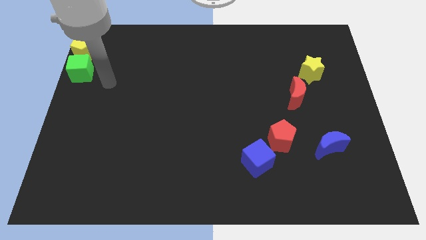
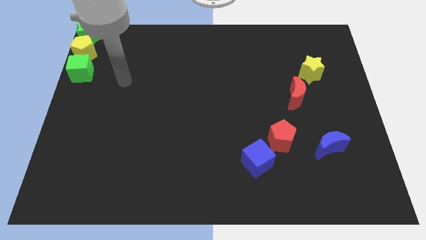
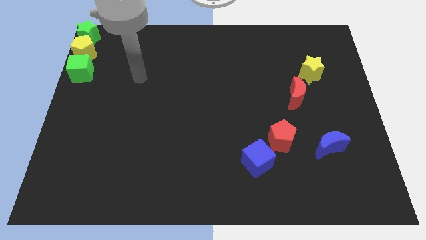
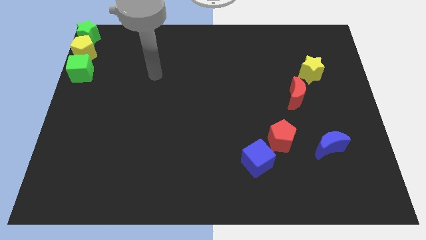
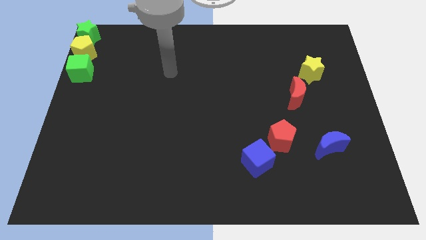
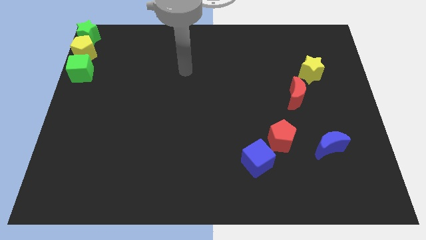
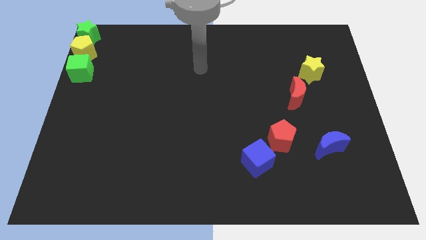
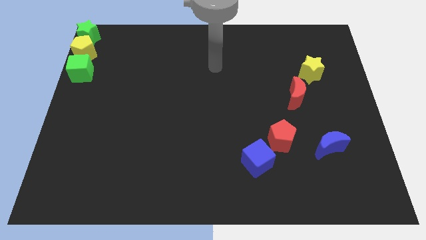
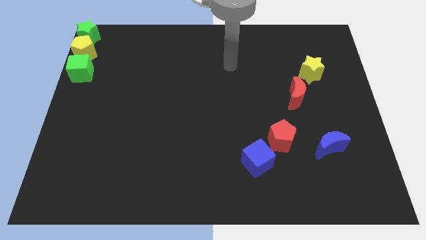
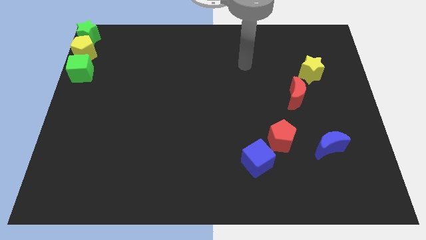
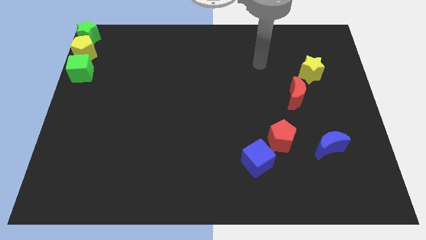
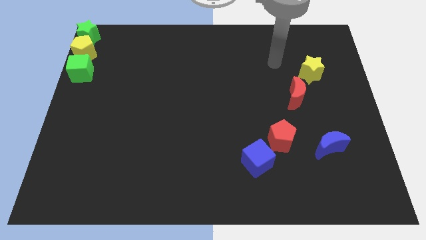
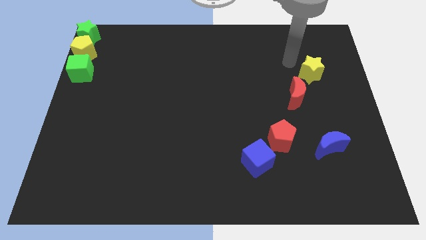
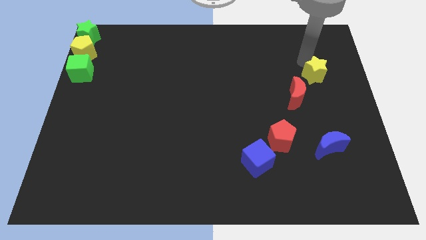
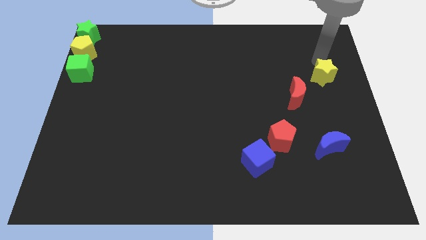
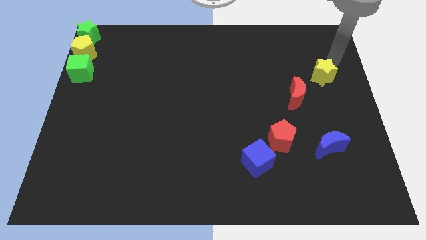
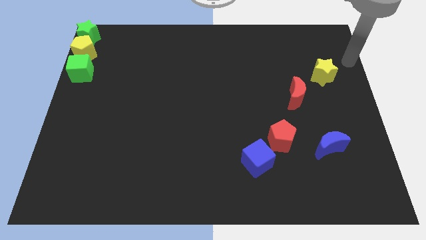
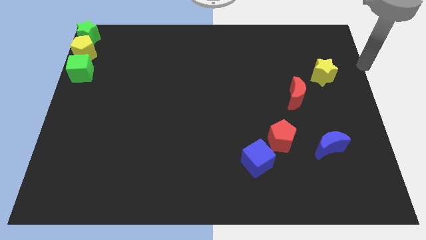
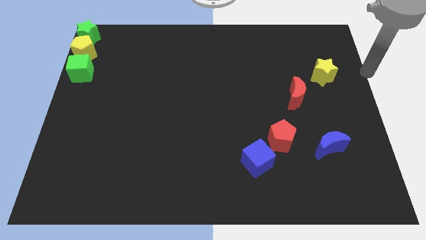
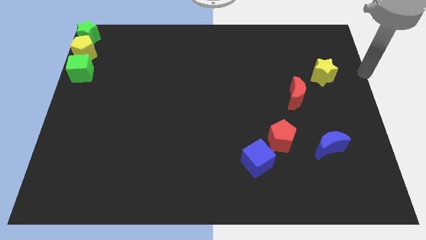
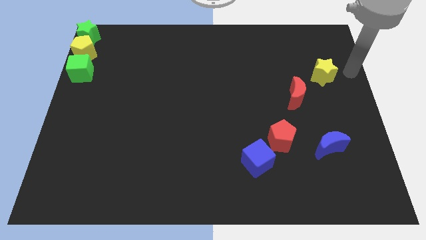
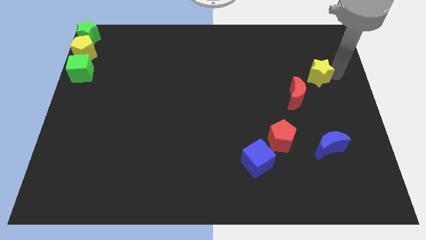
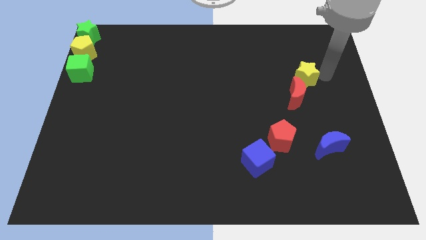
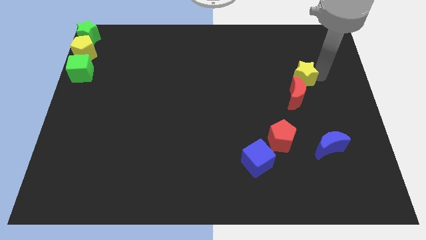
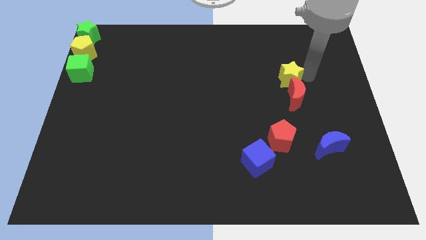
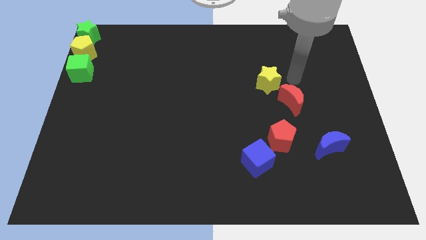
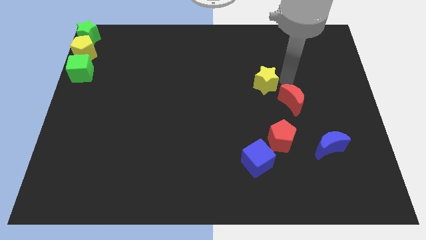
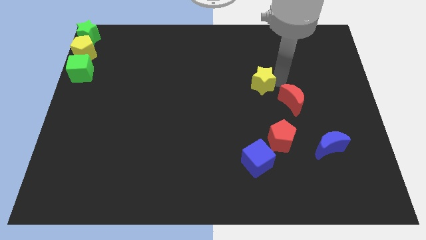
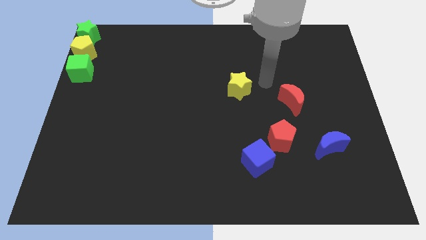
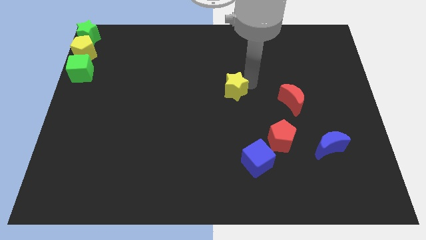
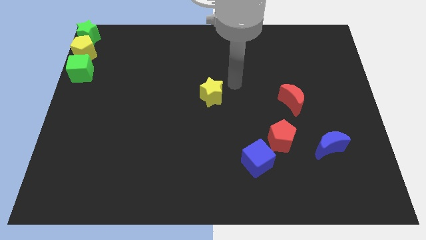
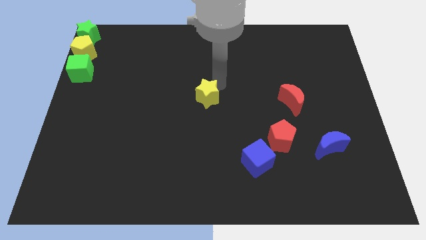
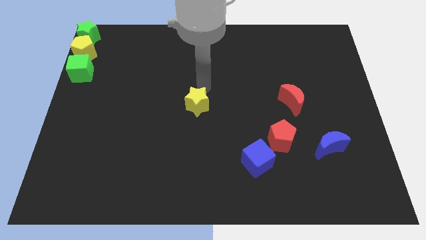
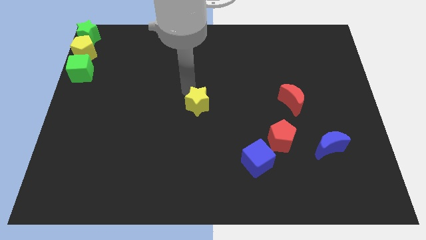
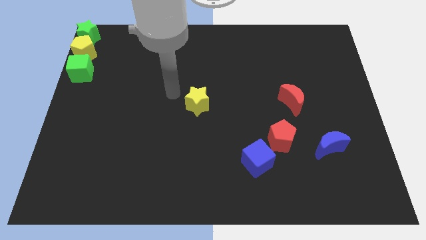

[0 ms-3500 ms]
place the yellow star in center of the board

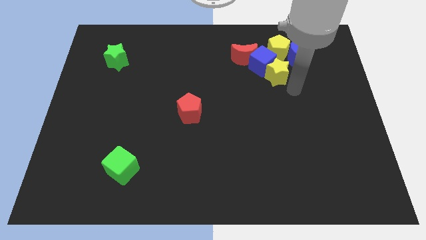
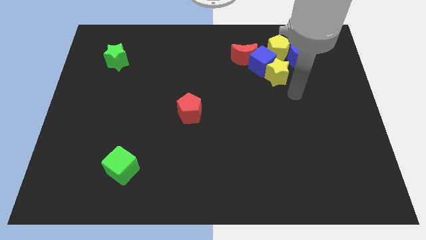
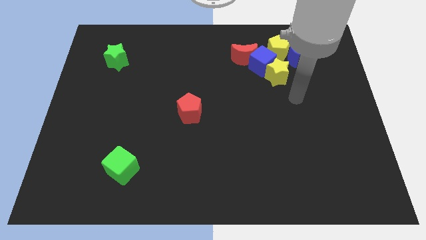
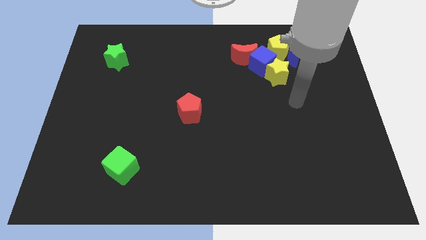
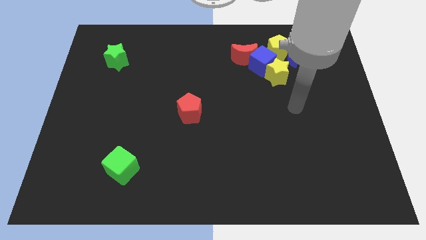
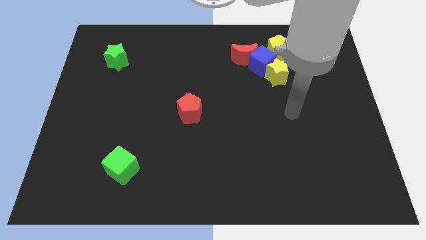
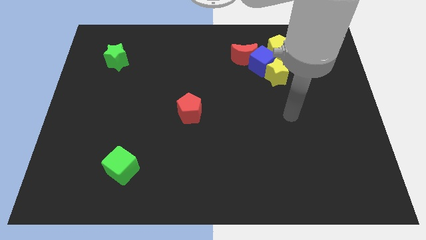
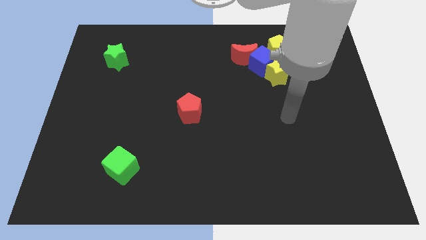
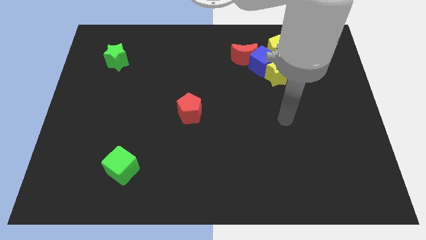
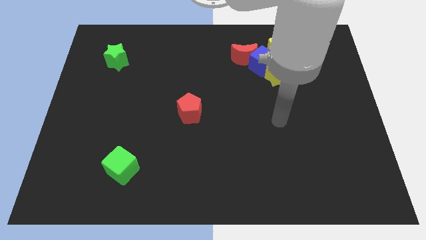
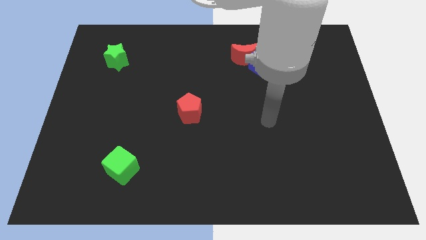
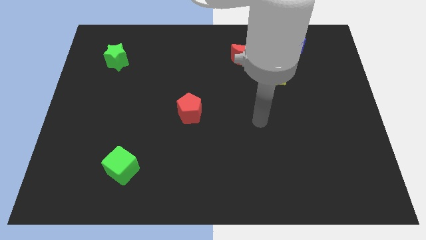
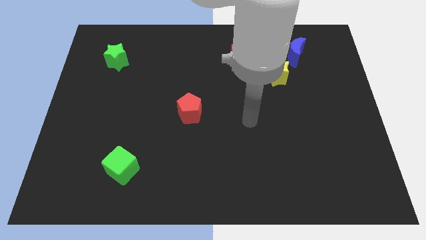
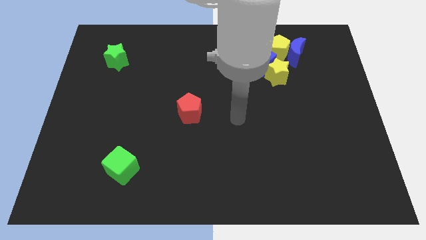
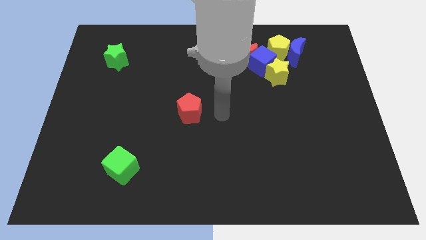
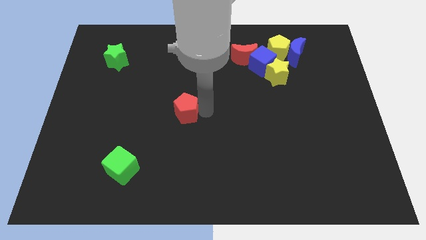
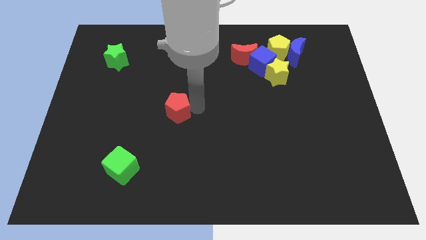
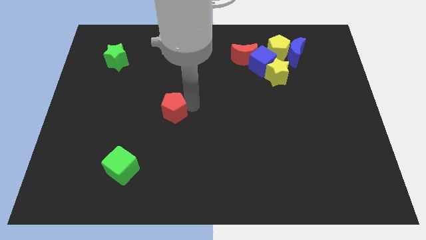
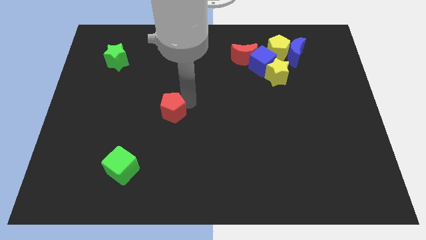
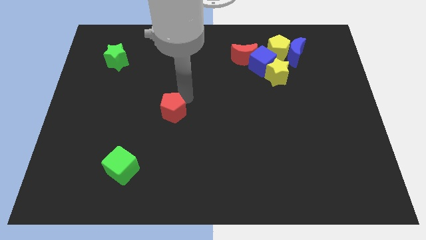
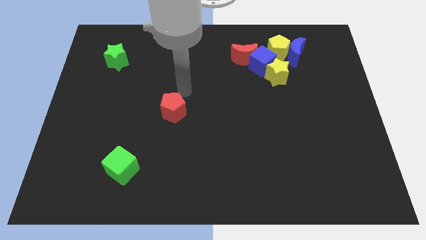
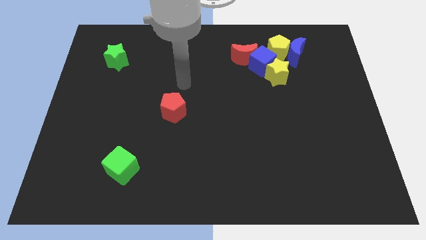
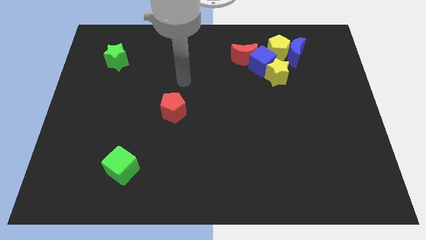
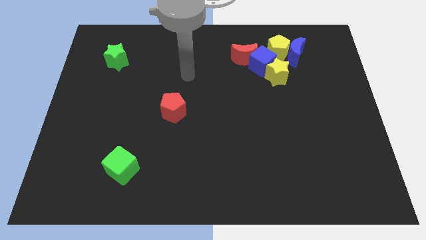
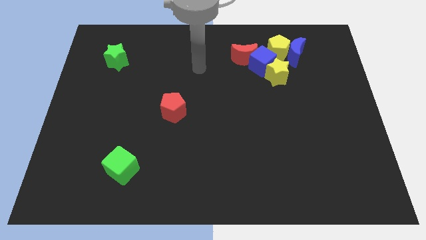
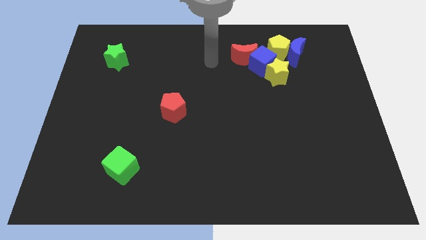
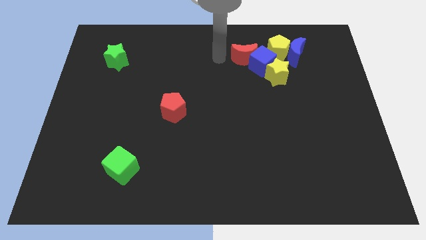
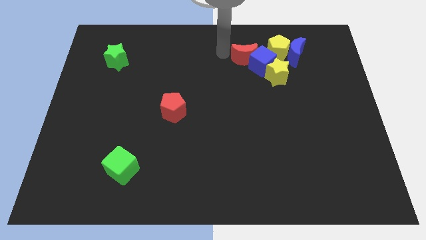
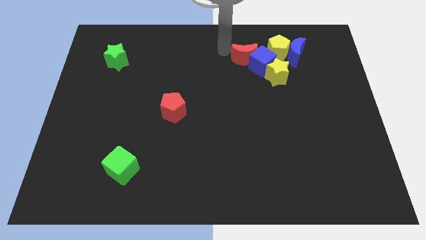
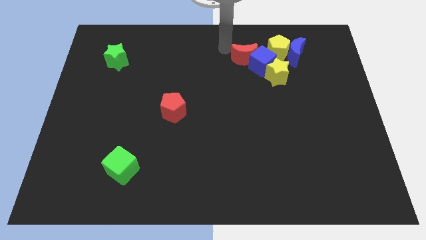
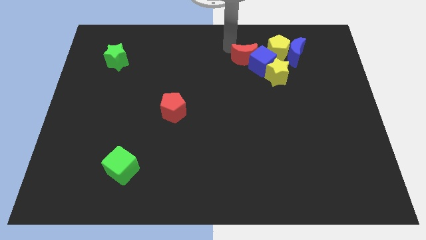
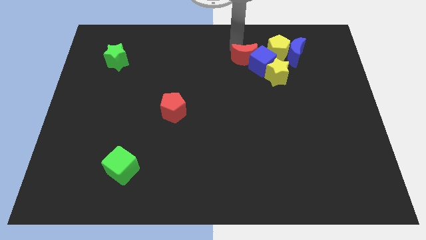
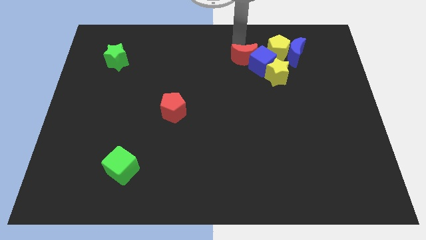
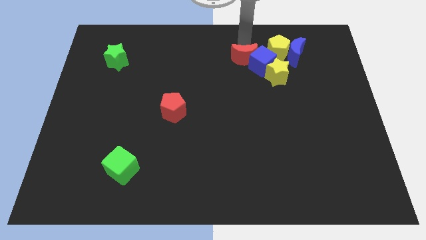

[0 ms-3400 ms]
slightly push the red pentagon to the left of the board

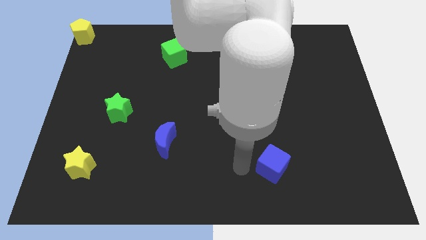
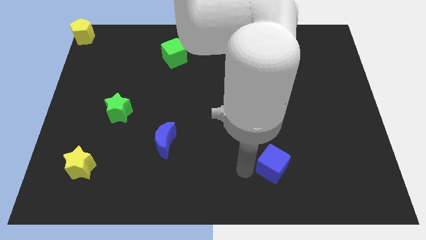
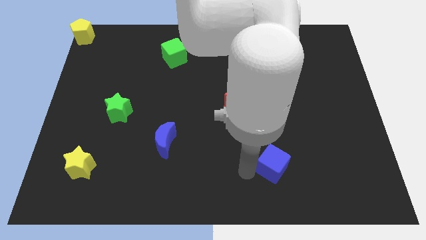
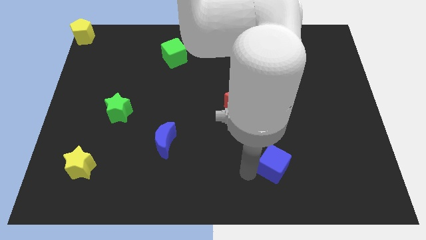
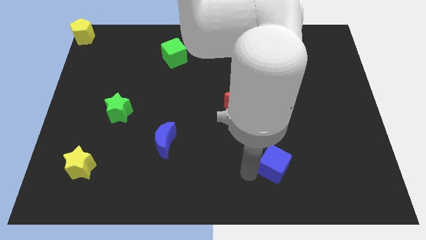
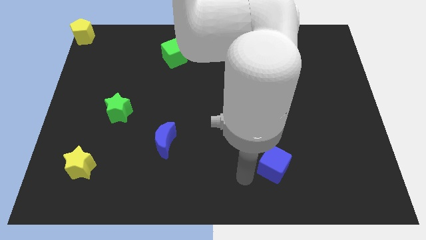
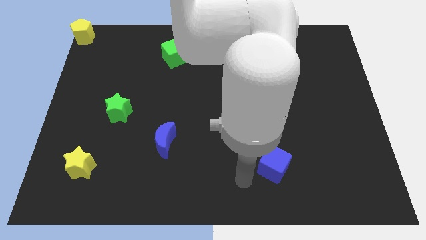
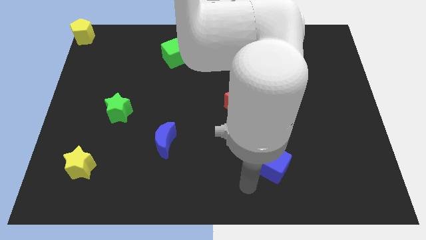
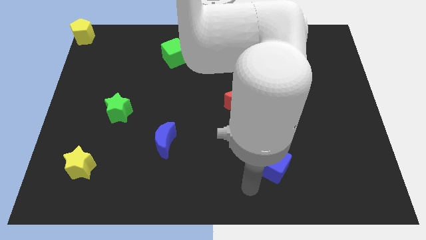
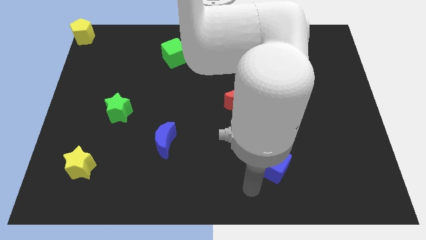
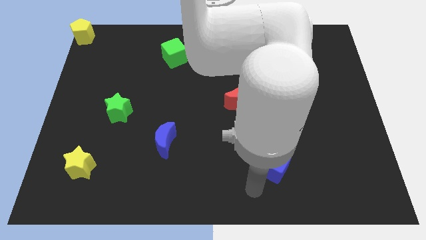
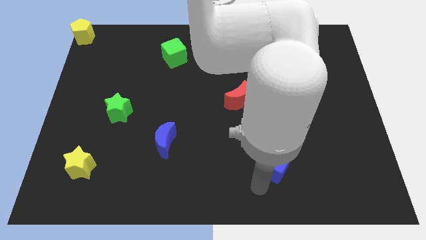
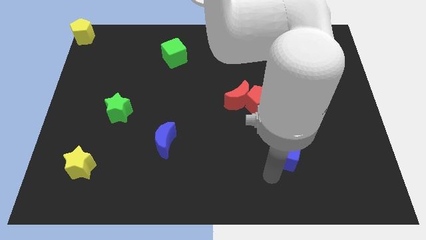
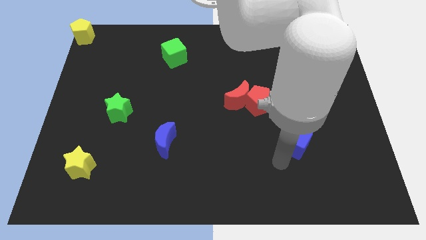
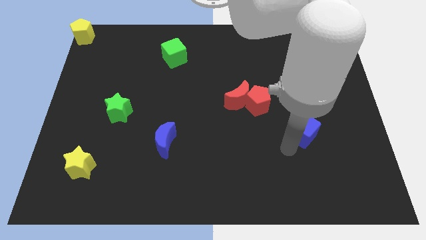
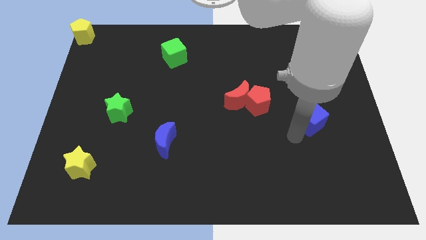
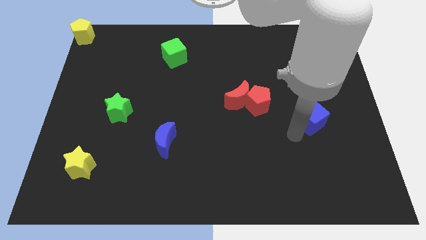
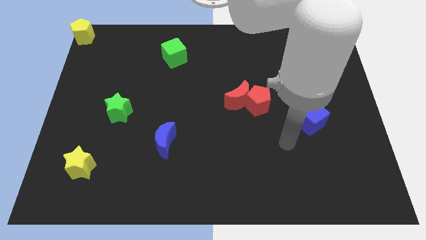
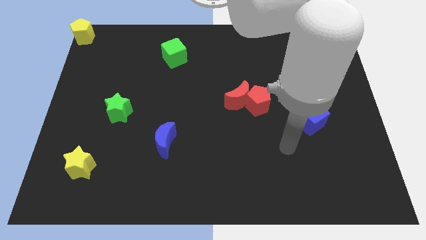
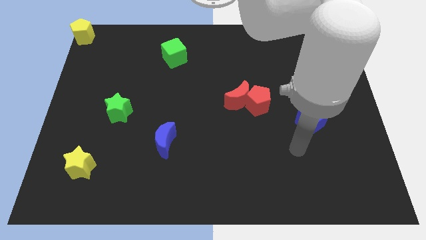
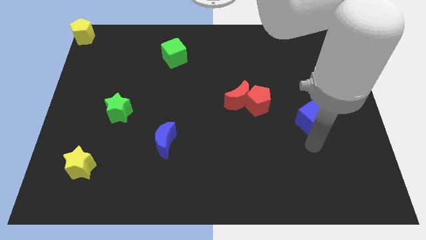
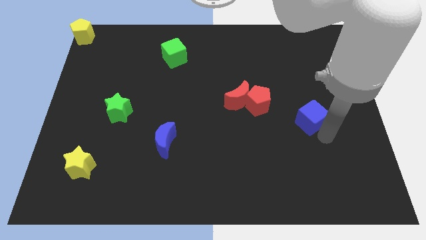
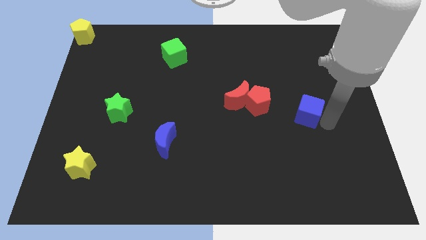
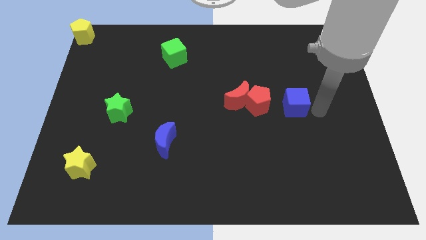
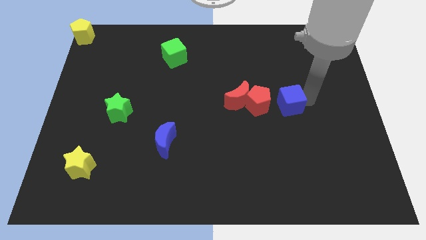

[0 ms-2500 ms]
place the blue cube right to the red pentagon
